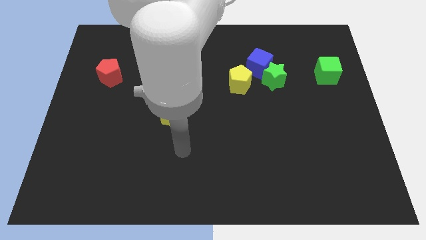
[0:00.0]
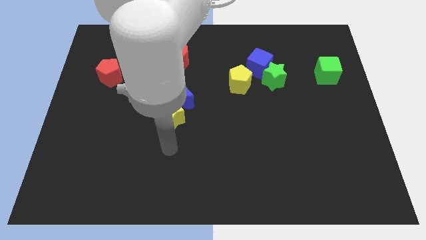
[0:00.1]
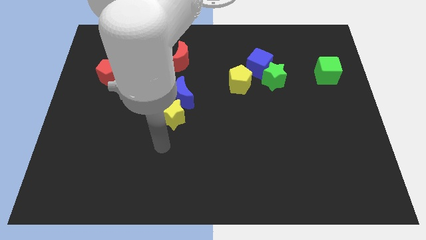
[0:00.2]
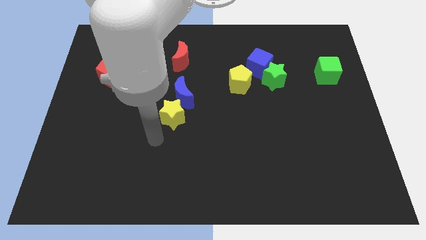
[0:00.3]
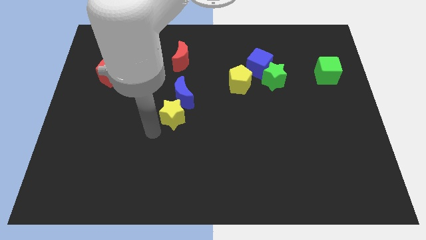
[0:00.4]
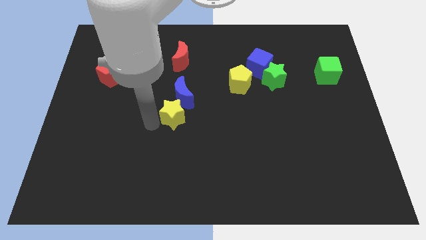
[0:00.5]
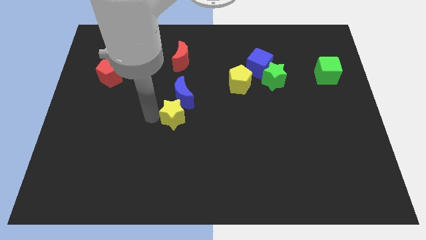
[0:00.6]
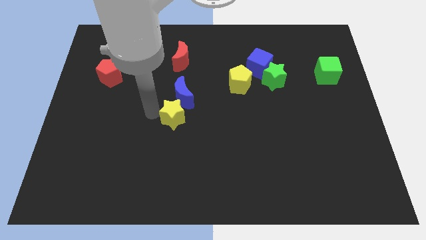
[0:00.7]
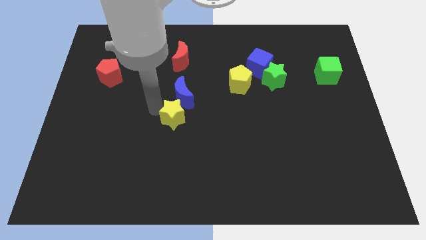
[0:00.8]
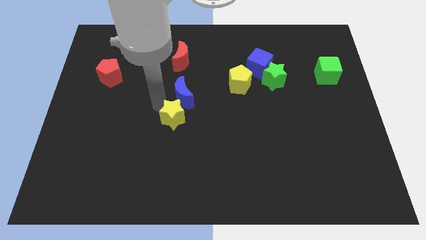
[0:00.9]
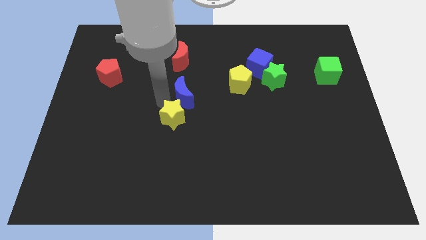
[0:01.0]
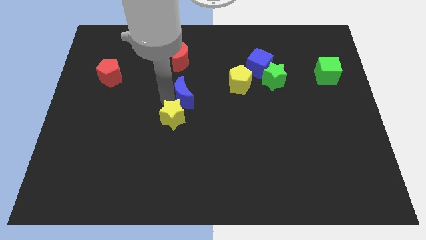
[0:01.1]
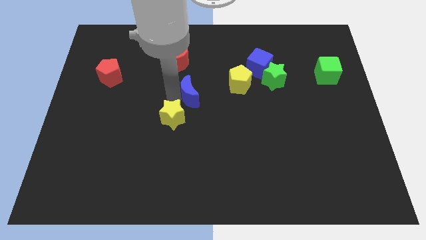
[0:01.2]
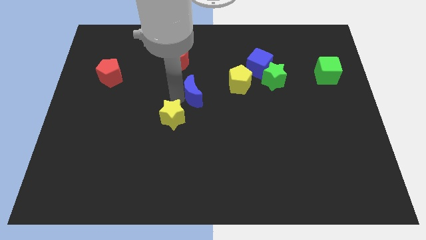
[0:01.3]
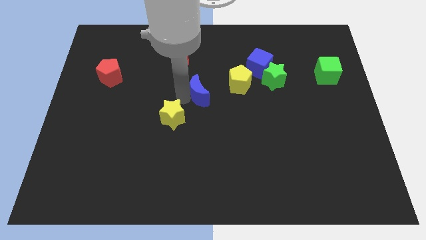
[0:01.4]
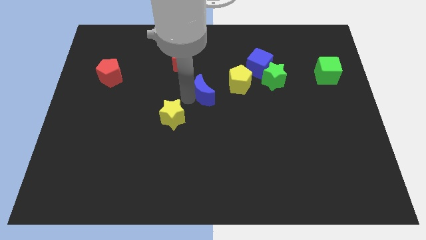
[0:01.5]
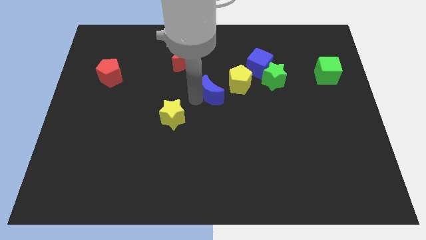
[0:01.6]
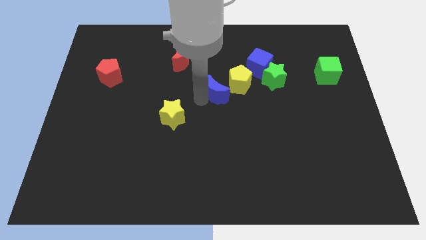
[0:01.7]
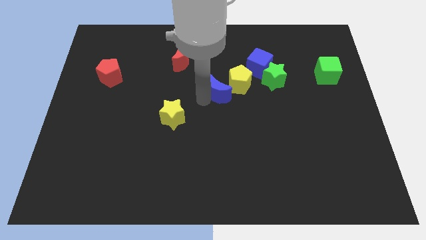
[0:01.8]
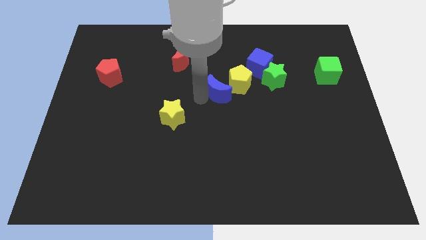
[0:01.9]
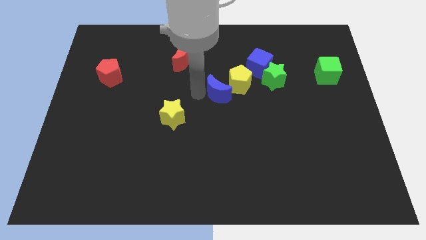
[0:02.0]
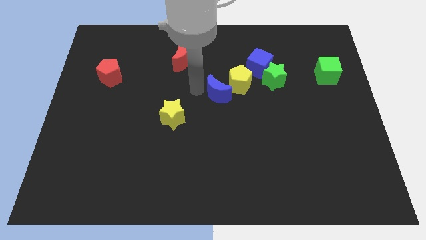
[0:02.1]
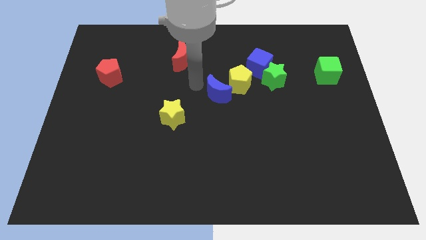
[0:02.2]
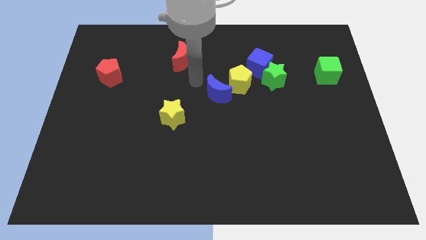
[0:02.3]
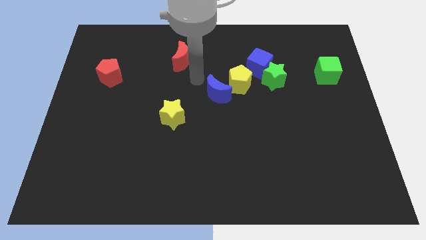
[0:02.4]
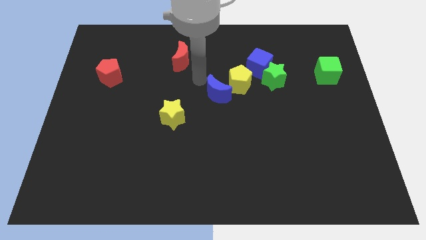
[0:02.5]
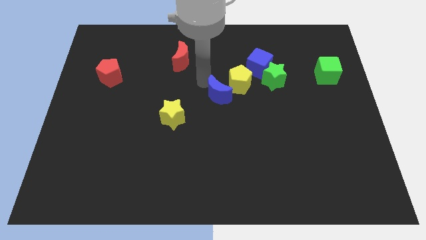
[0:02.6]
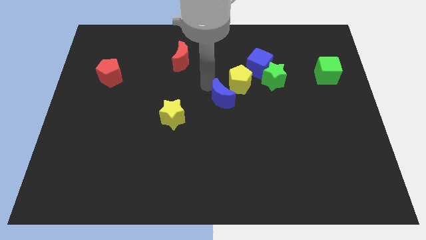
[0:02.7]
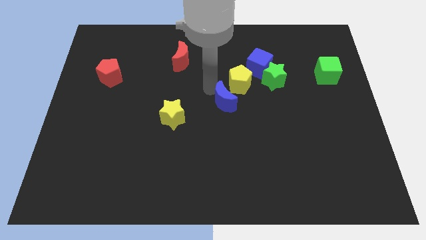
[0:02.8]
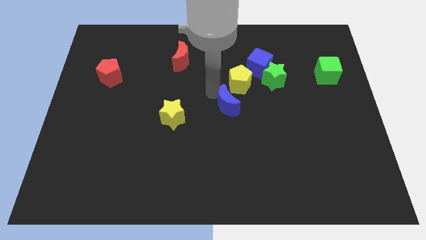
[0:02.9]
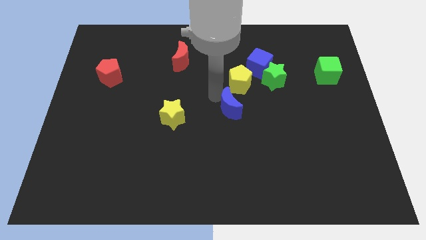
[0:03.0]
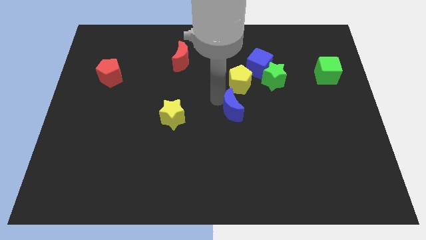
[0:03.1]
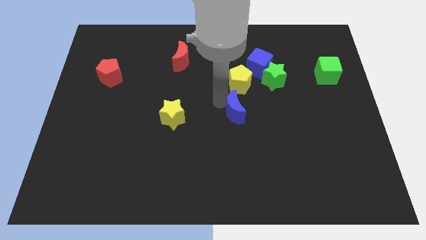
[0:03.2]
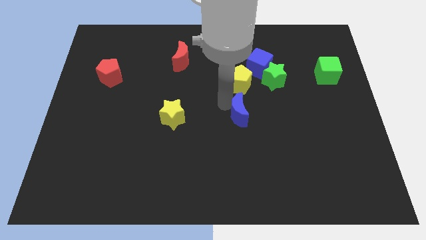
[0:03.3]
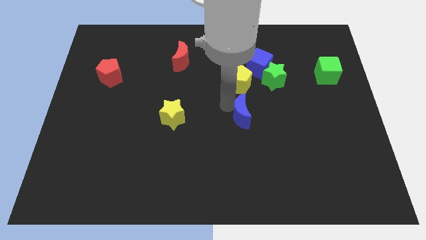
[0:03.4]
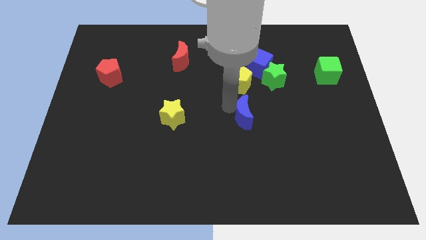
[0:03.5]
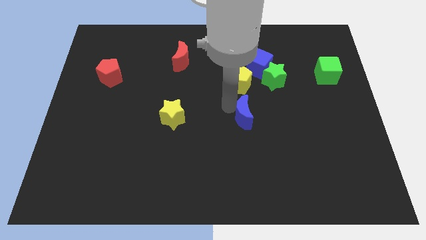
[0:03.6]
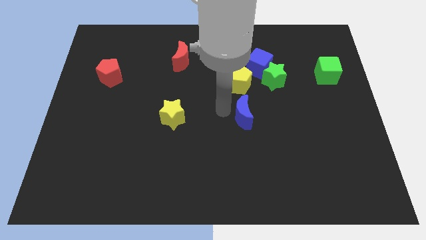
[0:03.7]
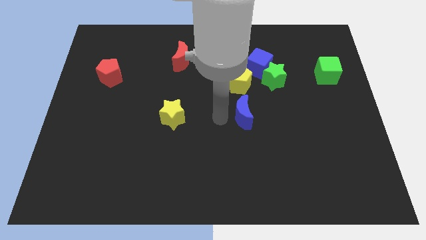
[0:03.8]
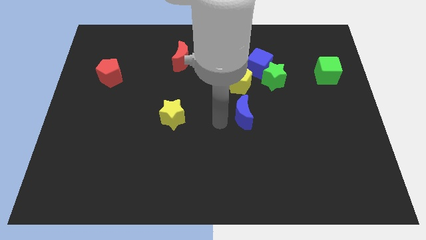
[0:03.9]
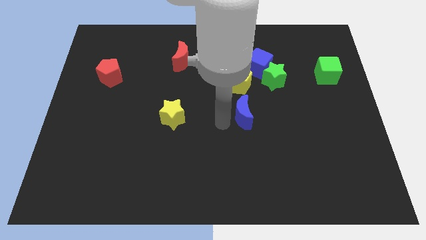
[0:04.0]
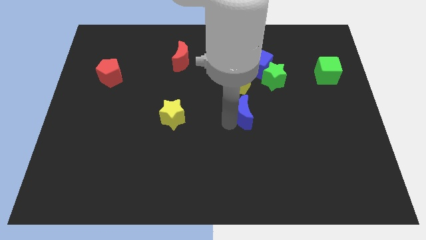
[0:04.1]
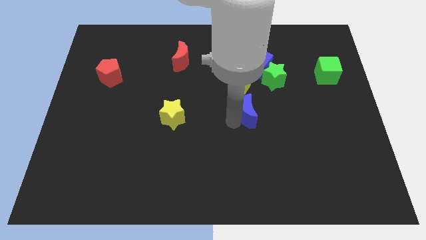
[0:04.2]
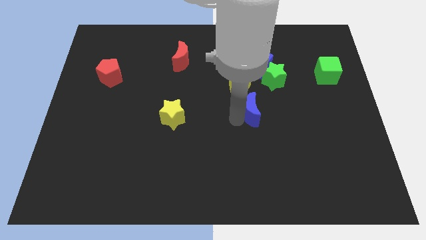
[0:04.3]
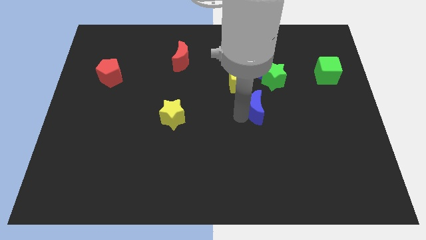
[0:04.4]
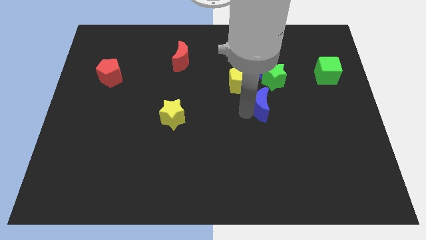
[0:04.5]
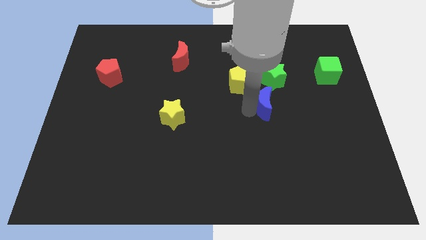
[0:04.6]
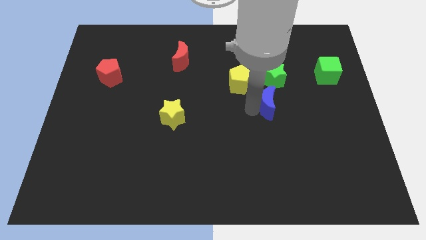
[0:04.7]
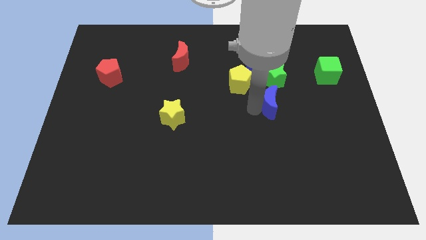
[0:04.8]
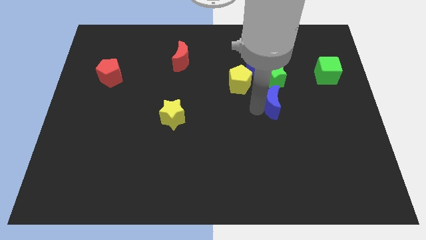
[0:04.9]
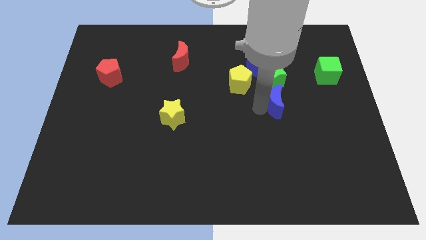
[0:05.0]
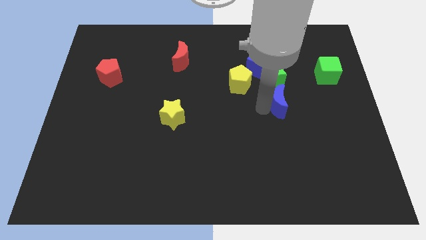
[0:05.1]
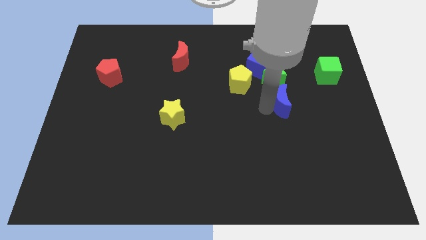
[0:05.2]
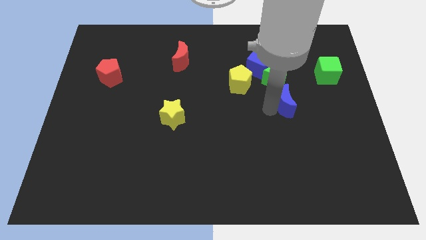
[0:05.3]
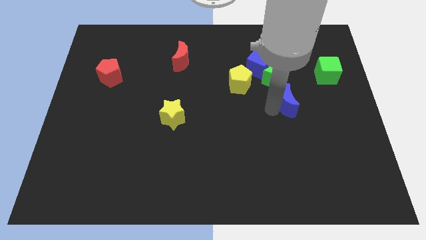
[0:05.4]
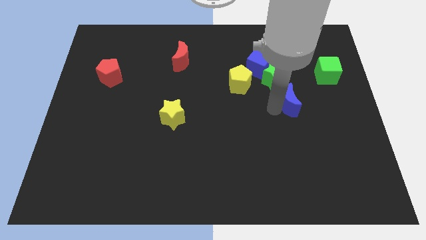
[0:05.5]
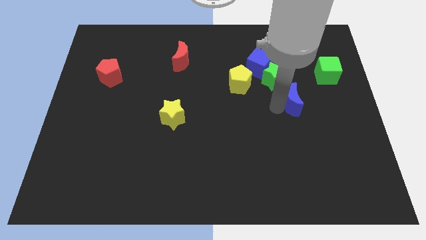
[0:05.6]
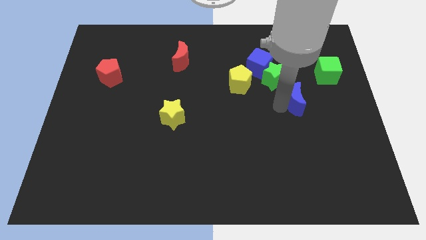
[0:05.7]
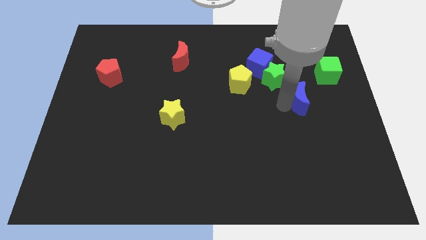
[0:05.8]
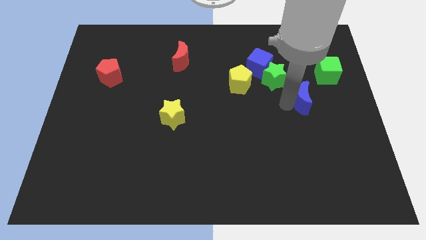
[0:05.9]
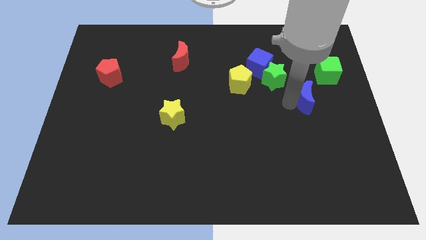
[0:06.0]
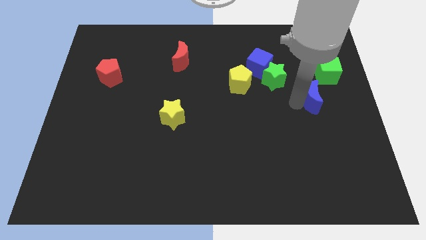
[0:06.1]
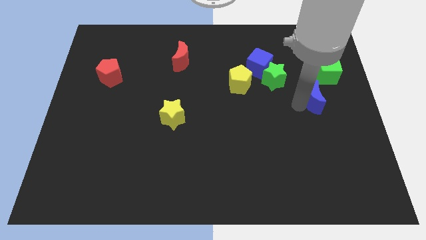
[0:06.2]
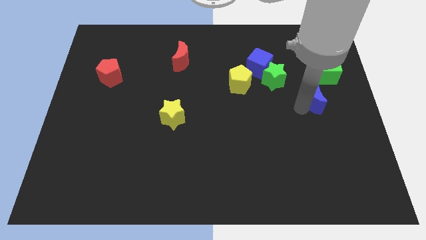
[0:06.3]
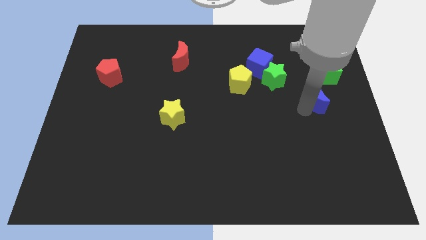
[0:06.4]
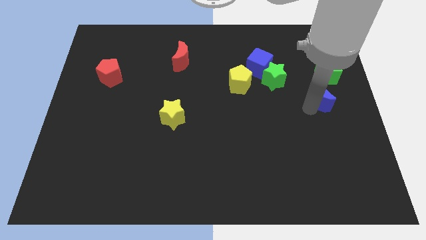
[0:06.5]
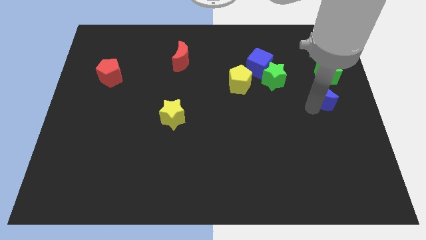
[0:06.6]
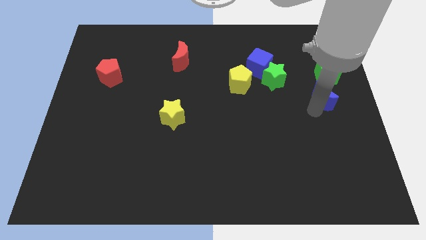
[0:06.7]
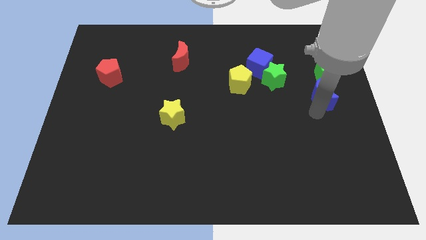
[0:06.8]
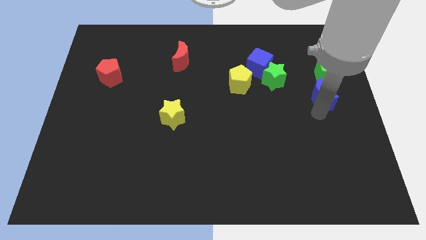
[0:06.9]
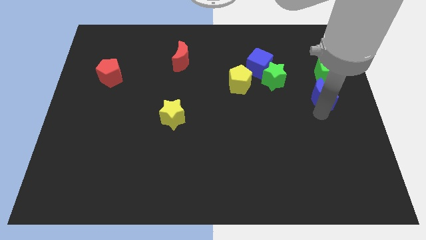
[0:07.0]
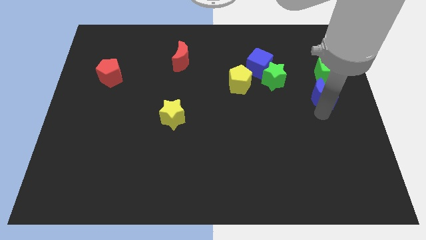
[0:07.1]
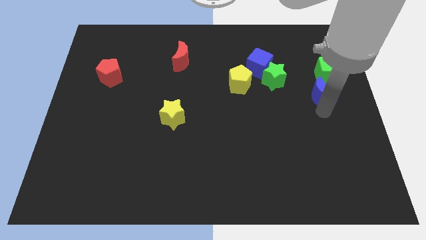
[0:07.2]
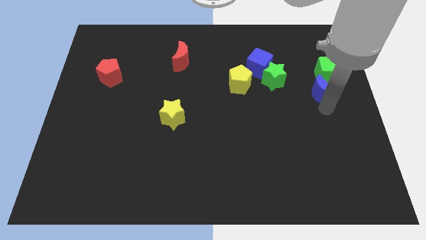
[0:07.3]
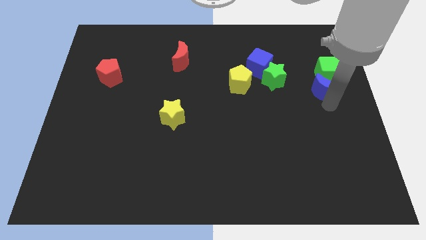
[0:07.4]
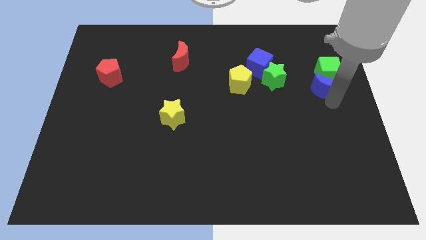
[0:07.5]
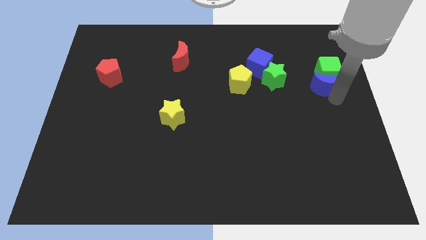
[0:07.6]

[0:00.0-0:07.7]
move the blue moon close to the green cube

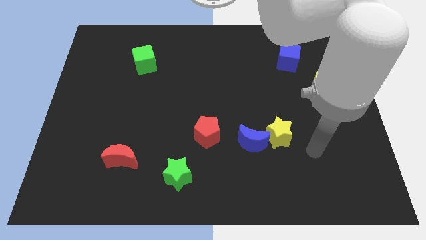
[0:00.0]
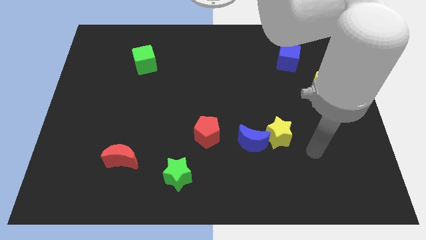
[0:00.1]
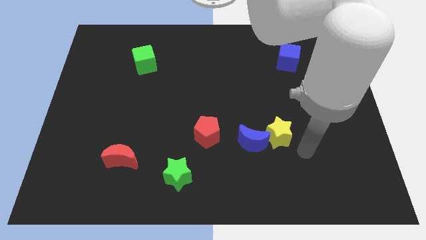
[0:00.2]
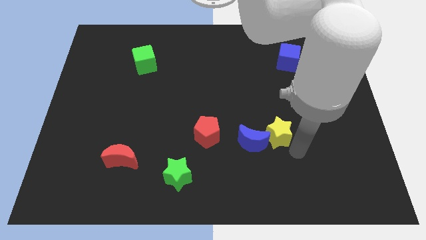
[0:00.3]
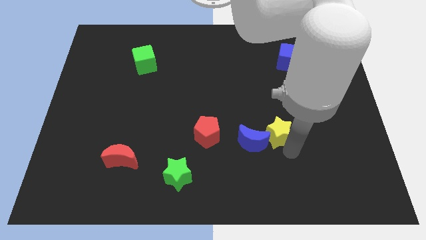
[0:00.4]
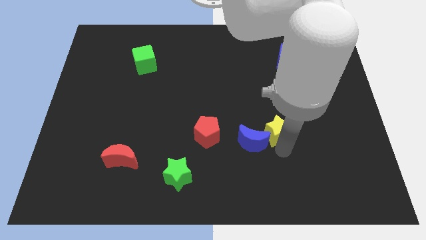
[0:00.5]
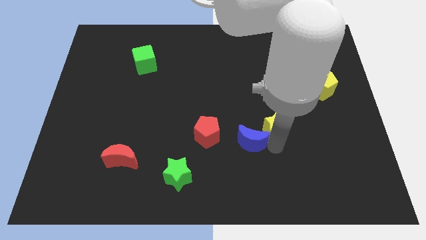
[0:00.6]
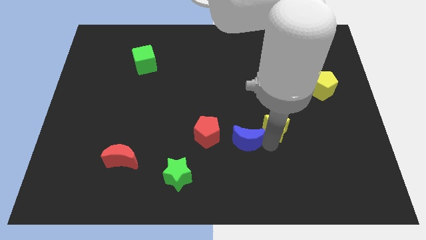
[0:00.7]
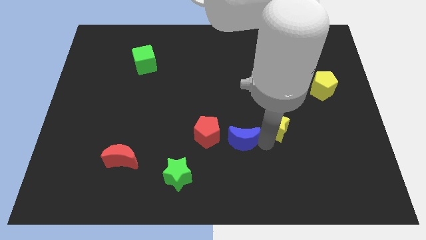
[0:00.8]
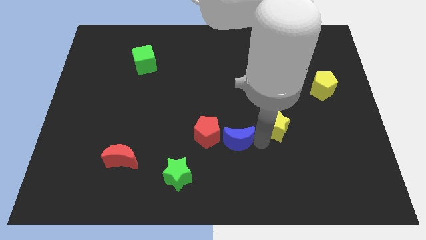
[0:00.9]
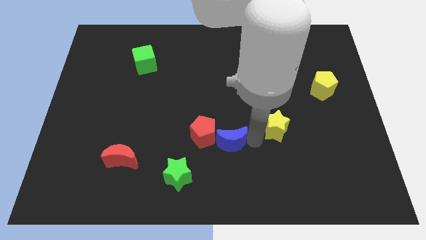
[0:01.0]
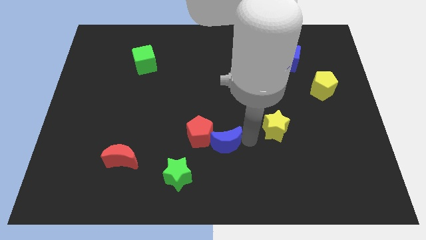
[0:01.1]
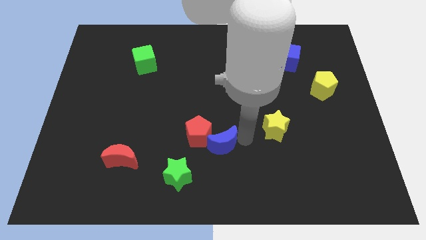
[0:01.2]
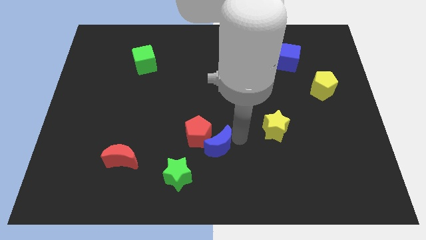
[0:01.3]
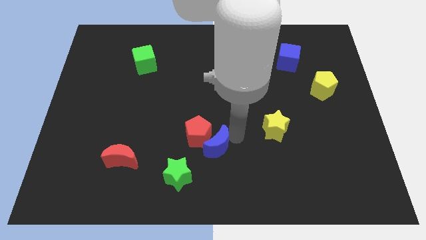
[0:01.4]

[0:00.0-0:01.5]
slide the blue moon to the red pentagon
